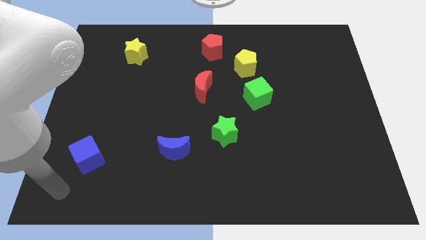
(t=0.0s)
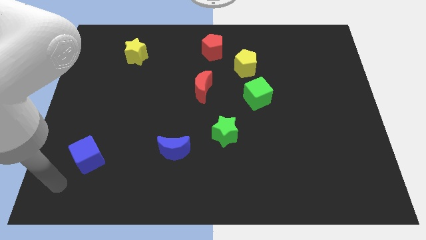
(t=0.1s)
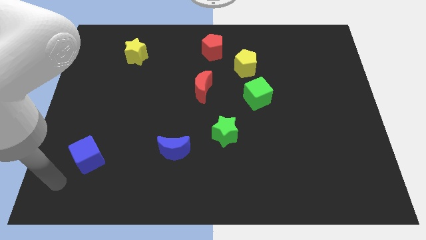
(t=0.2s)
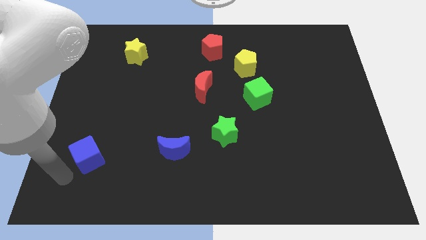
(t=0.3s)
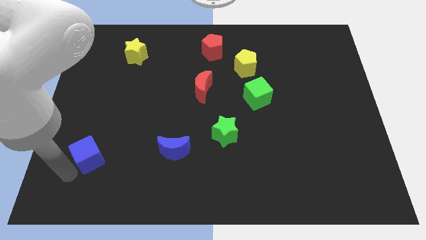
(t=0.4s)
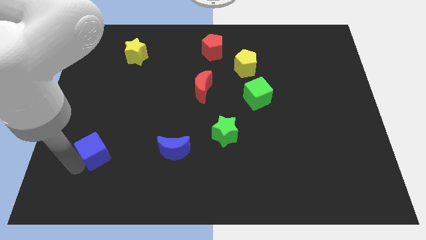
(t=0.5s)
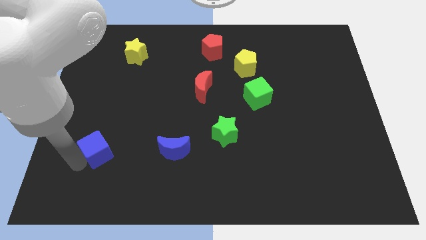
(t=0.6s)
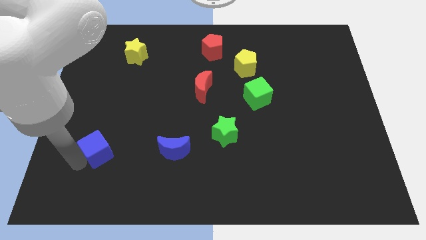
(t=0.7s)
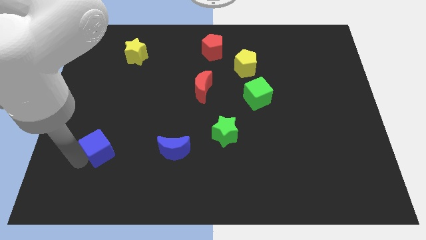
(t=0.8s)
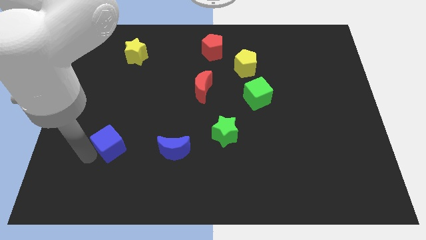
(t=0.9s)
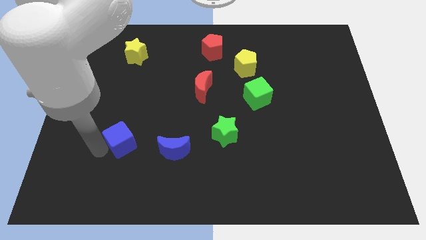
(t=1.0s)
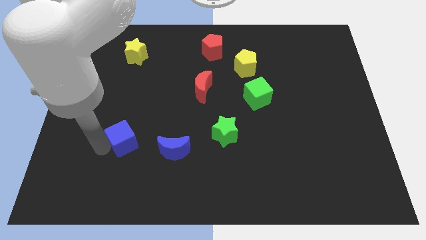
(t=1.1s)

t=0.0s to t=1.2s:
push the blue cube on the left side of the blue crescent

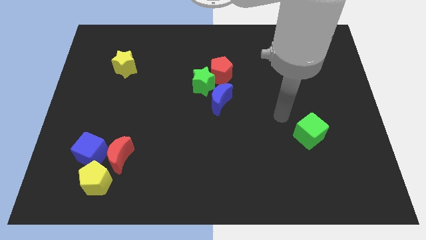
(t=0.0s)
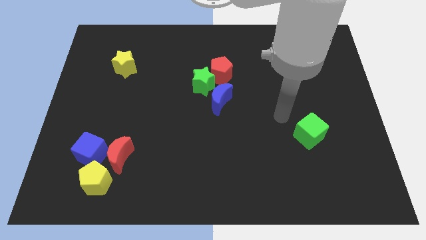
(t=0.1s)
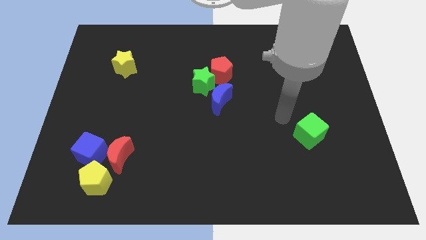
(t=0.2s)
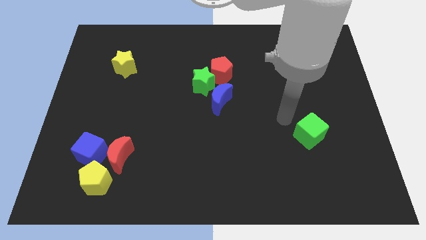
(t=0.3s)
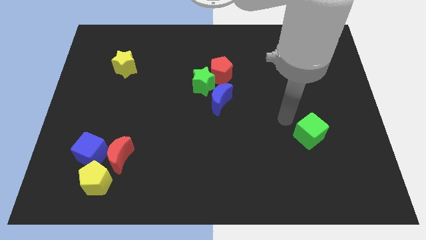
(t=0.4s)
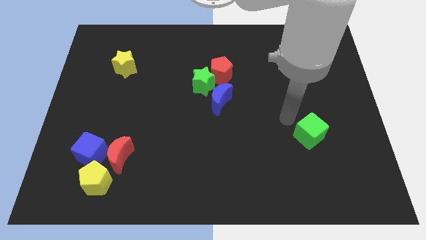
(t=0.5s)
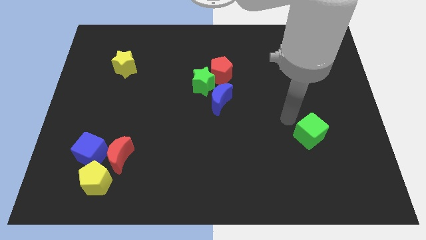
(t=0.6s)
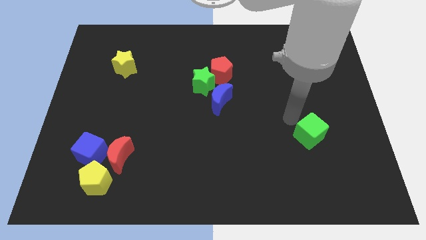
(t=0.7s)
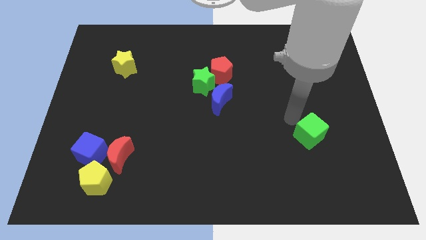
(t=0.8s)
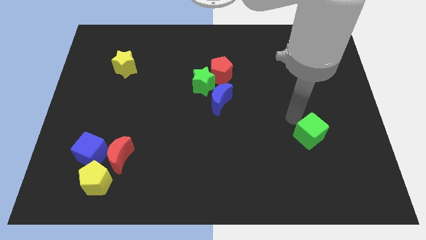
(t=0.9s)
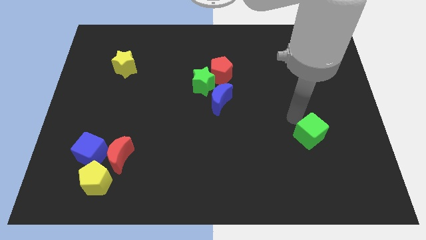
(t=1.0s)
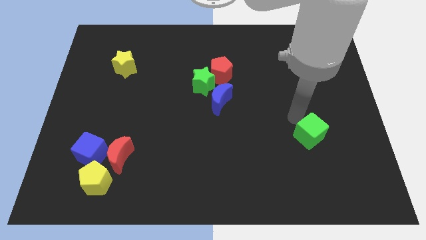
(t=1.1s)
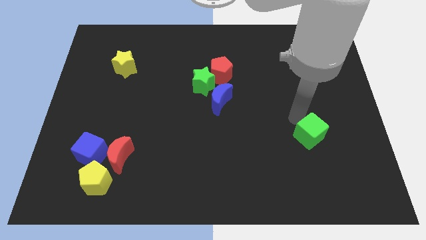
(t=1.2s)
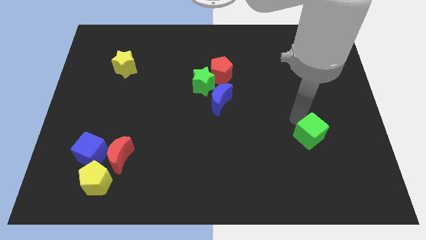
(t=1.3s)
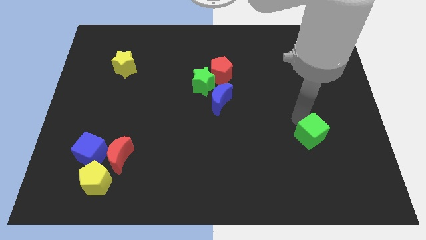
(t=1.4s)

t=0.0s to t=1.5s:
touch the top of green cube

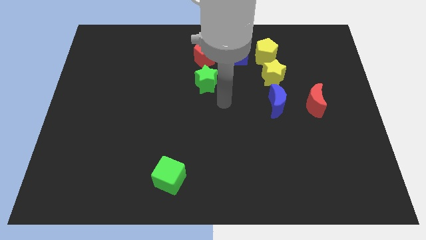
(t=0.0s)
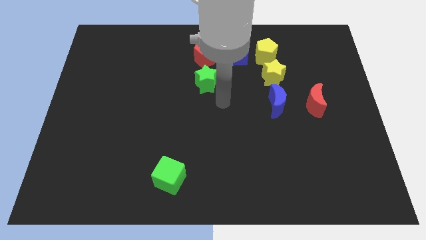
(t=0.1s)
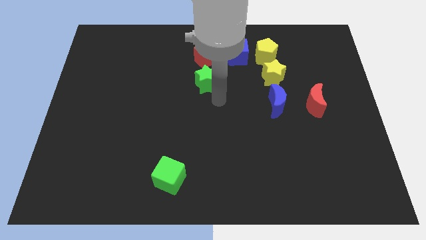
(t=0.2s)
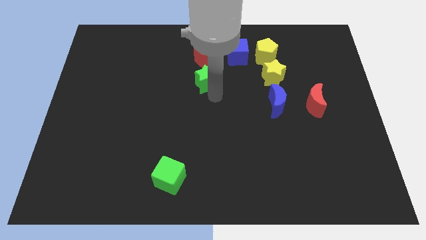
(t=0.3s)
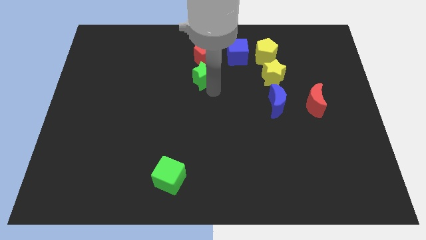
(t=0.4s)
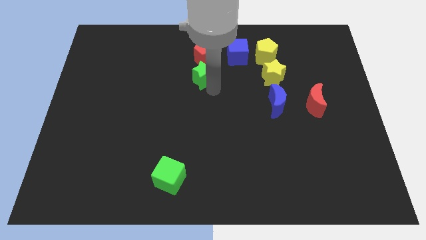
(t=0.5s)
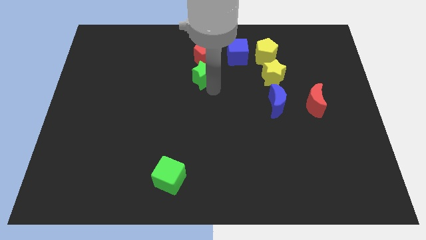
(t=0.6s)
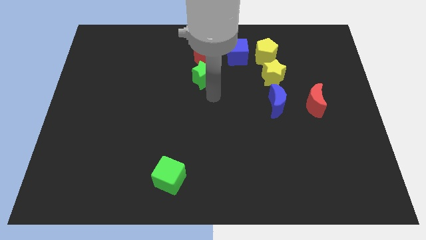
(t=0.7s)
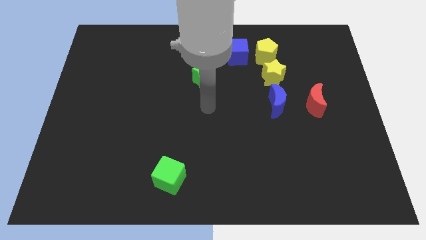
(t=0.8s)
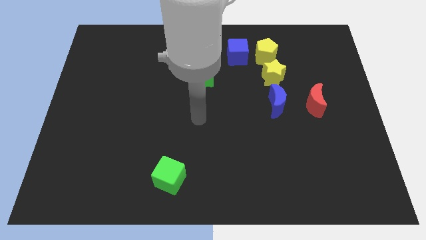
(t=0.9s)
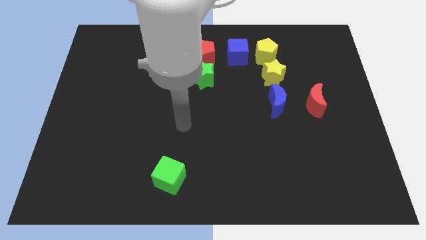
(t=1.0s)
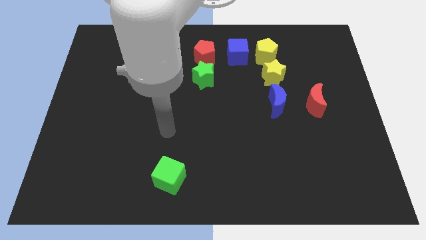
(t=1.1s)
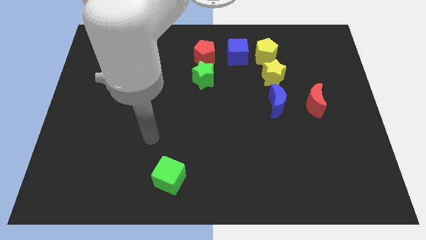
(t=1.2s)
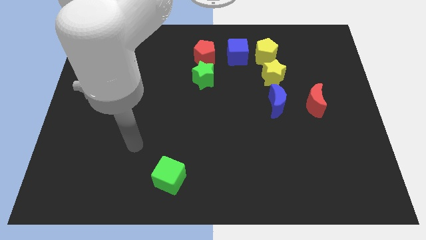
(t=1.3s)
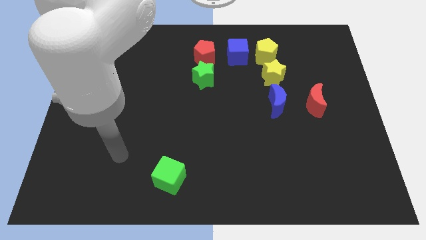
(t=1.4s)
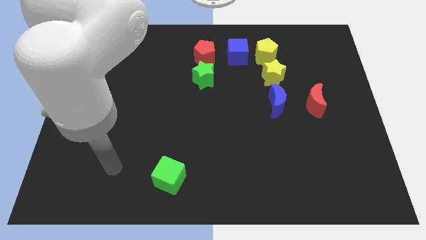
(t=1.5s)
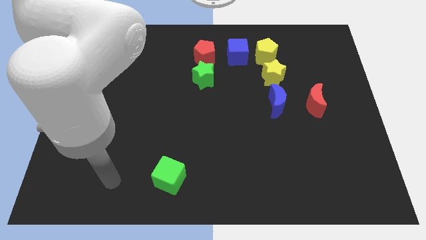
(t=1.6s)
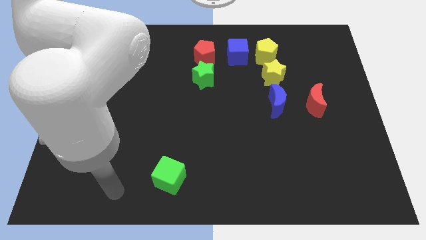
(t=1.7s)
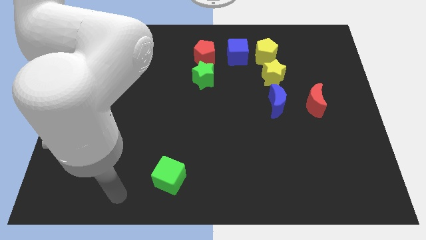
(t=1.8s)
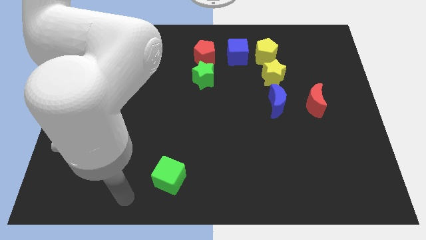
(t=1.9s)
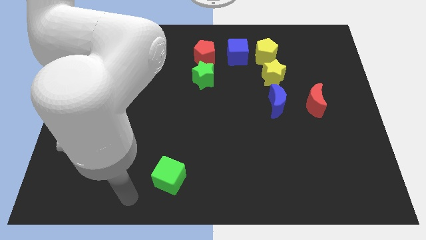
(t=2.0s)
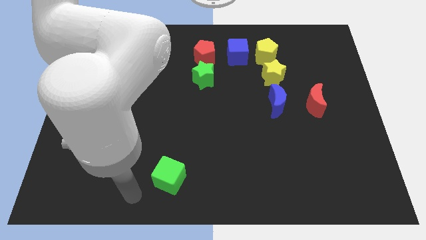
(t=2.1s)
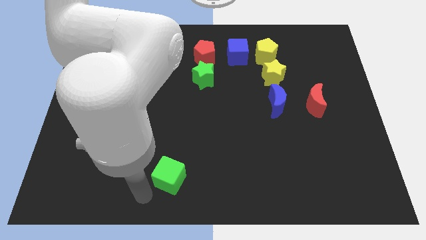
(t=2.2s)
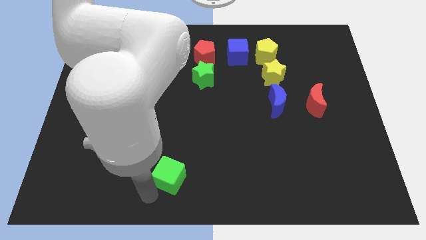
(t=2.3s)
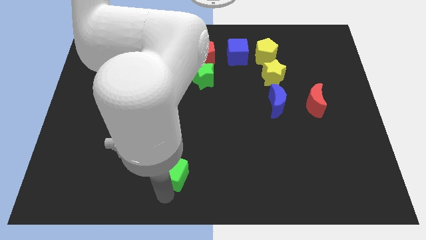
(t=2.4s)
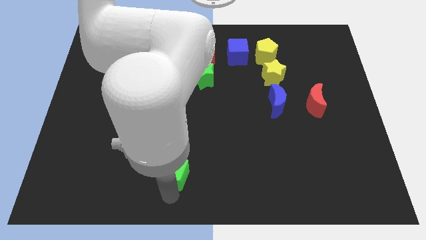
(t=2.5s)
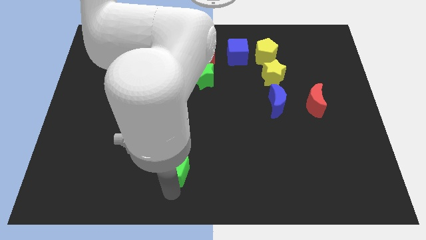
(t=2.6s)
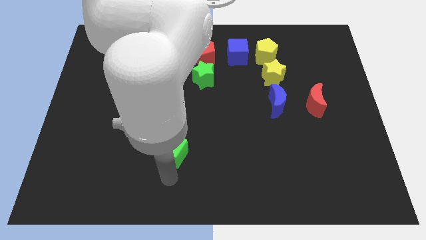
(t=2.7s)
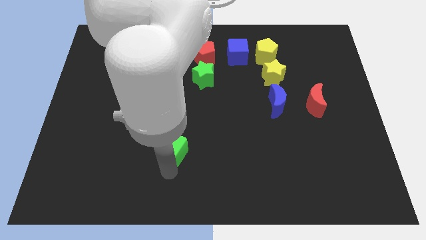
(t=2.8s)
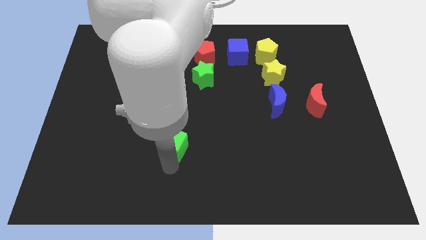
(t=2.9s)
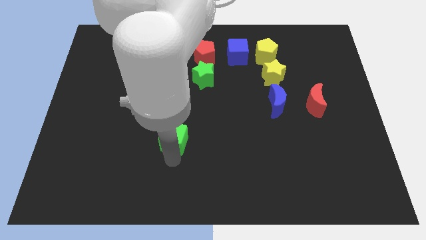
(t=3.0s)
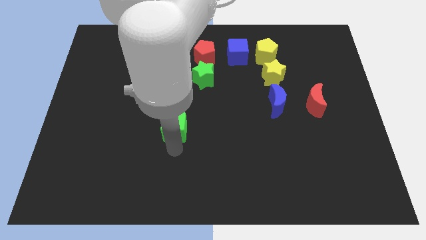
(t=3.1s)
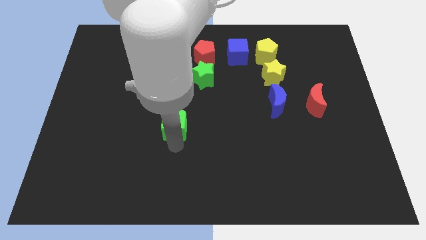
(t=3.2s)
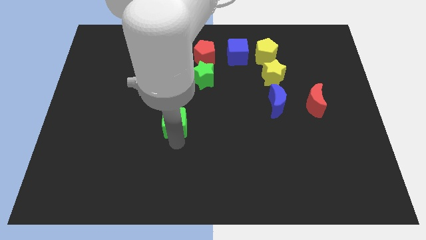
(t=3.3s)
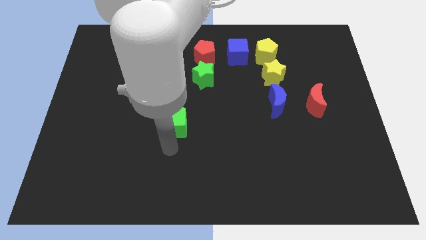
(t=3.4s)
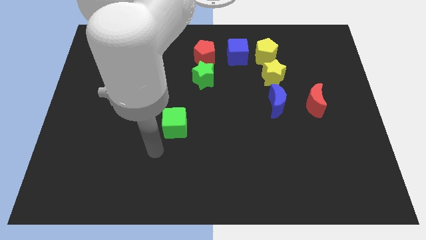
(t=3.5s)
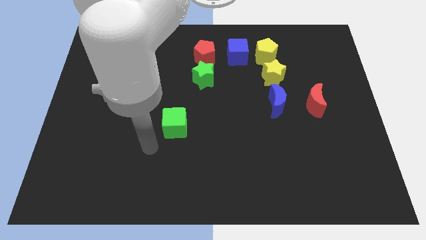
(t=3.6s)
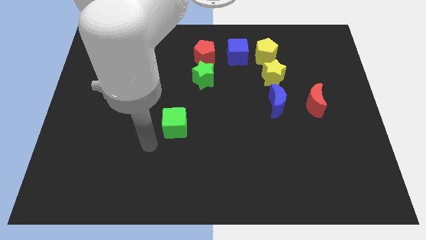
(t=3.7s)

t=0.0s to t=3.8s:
drag the green cube towards the green star

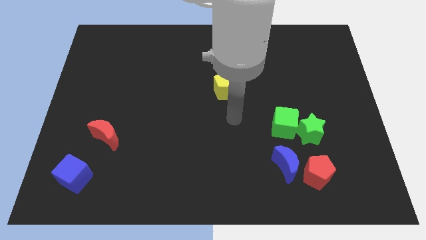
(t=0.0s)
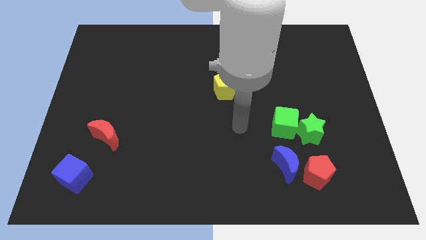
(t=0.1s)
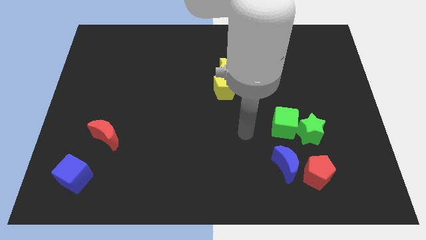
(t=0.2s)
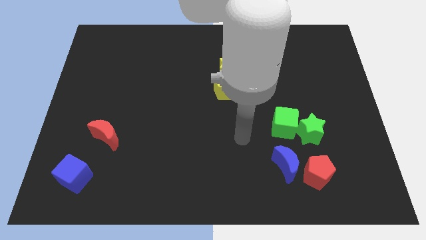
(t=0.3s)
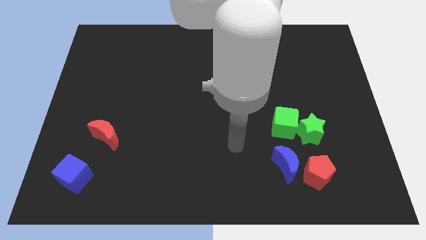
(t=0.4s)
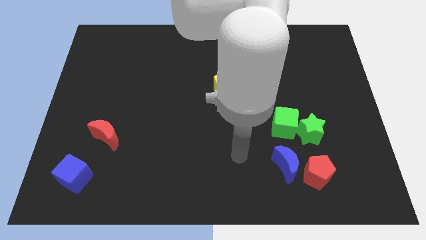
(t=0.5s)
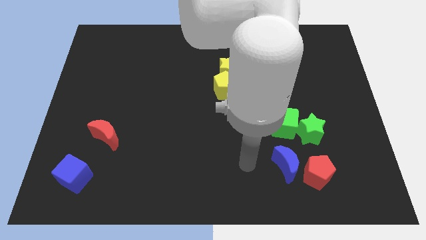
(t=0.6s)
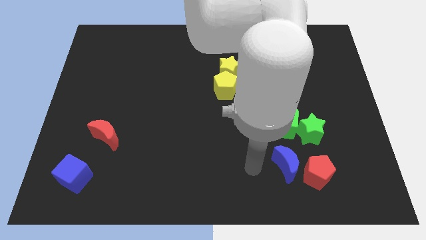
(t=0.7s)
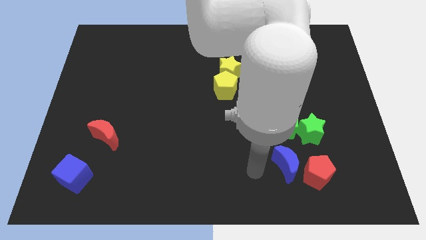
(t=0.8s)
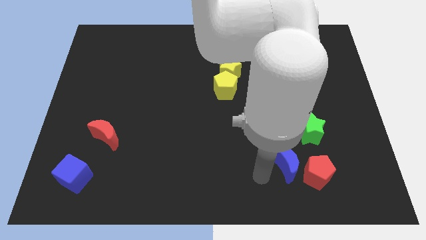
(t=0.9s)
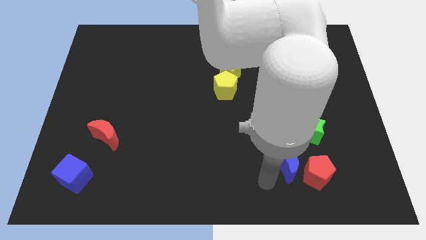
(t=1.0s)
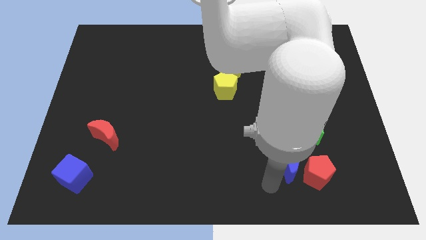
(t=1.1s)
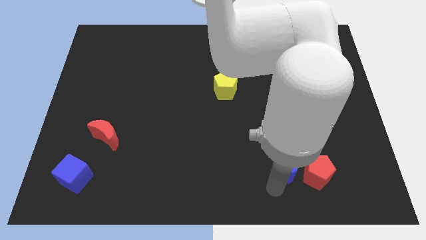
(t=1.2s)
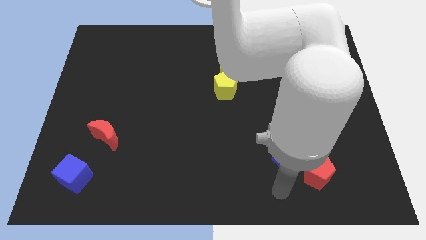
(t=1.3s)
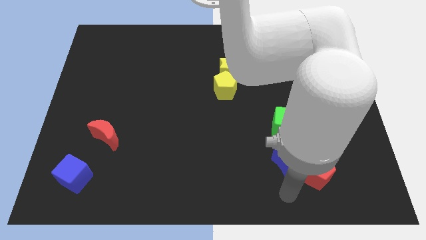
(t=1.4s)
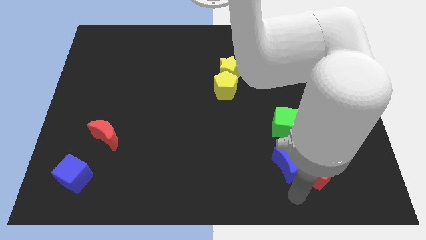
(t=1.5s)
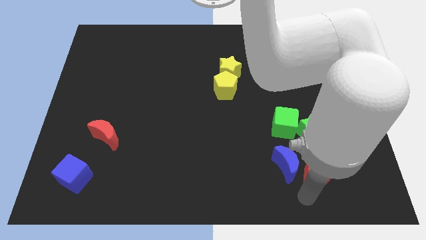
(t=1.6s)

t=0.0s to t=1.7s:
point your arm below the blue moon

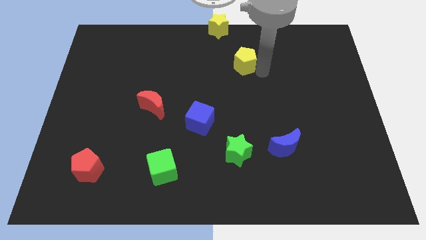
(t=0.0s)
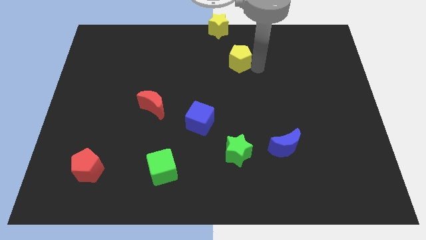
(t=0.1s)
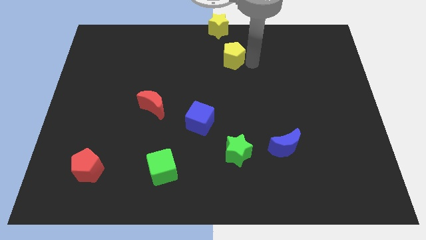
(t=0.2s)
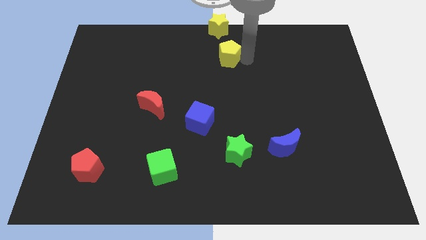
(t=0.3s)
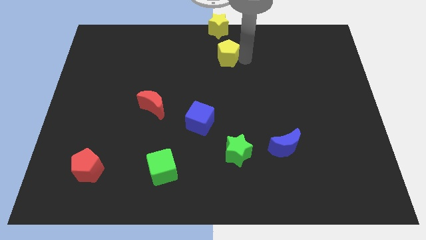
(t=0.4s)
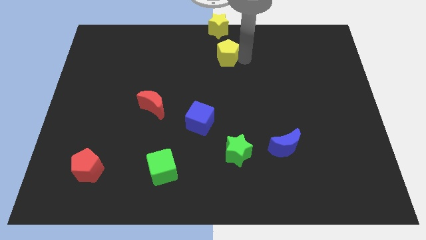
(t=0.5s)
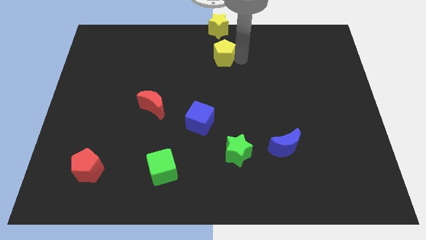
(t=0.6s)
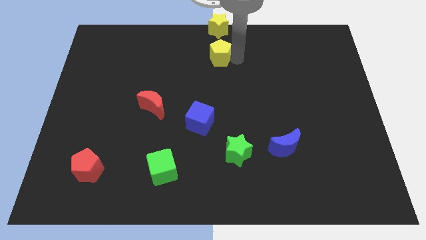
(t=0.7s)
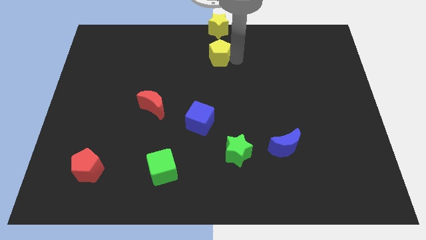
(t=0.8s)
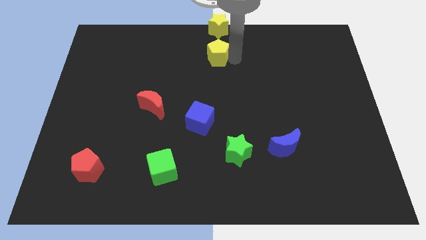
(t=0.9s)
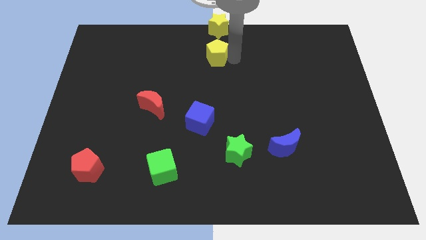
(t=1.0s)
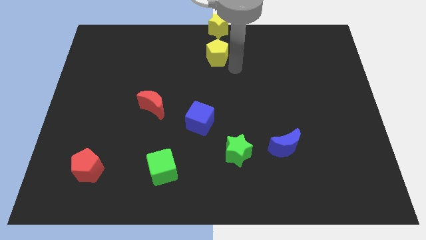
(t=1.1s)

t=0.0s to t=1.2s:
put the yellow pentagon vertically below the yellow star
